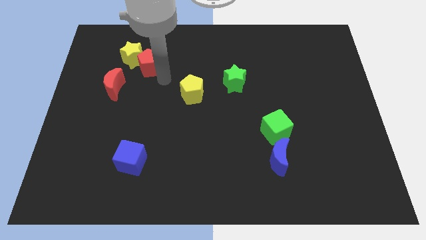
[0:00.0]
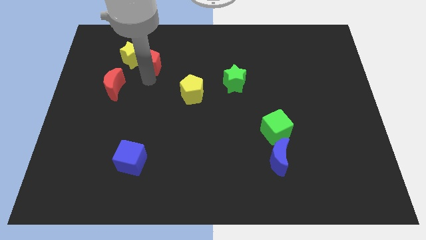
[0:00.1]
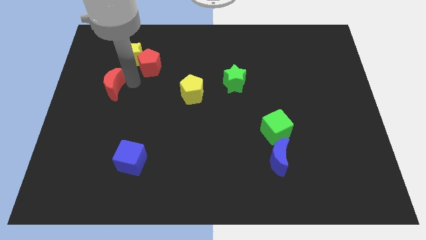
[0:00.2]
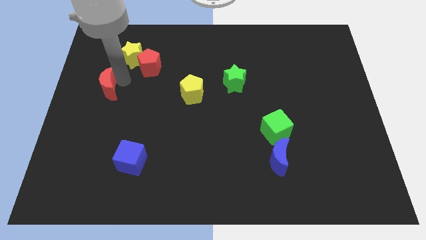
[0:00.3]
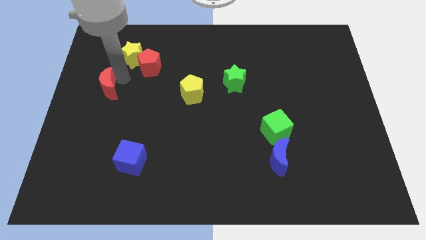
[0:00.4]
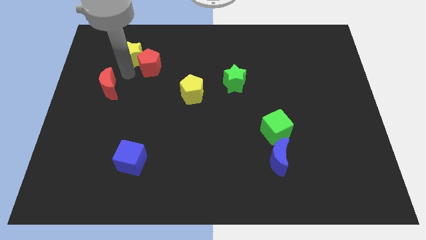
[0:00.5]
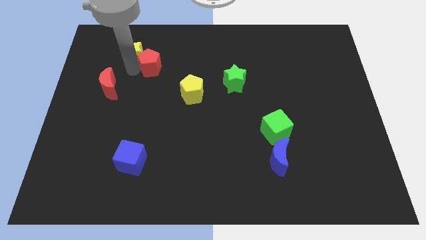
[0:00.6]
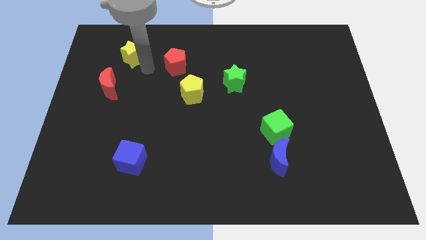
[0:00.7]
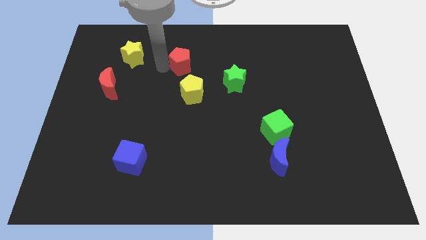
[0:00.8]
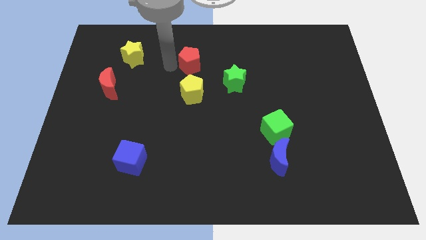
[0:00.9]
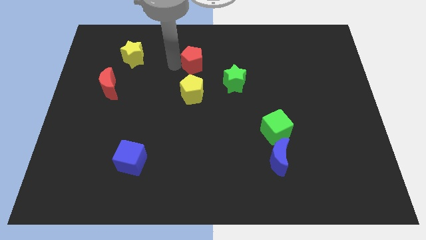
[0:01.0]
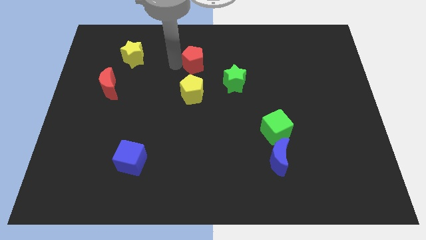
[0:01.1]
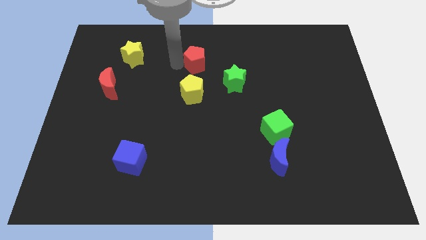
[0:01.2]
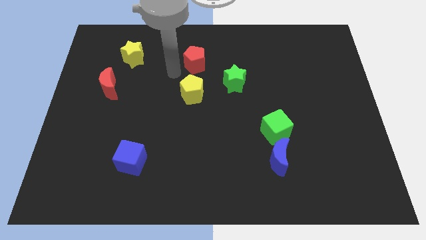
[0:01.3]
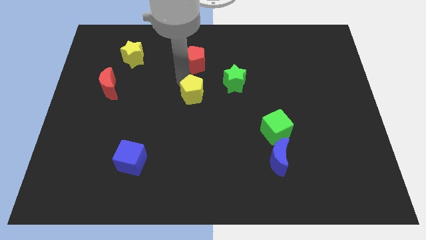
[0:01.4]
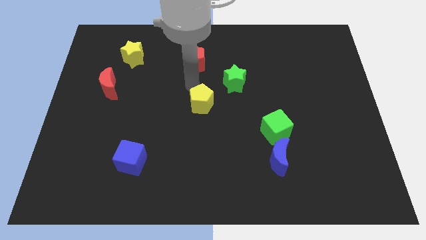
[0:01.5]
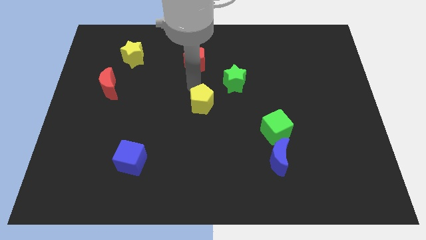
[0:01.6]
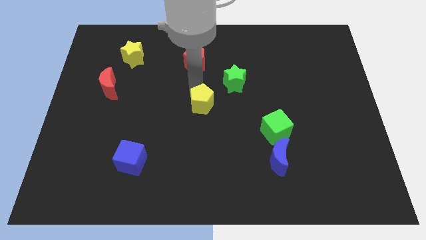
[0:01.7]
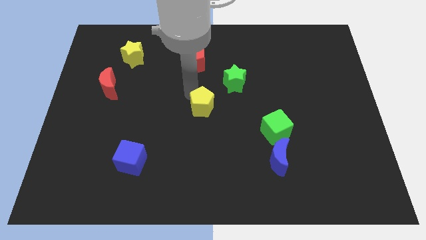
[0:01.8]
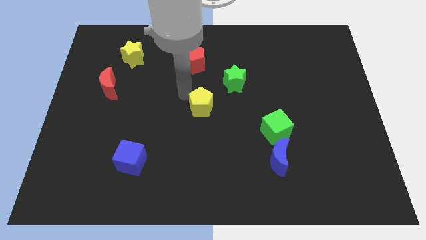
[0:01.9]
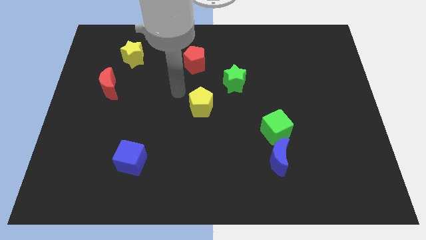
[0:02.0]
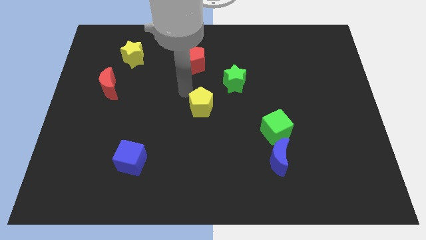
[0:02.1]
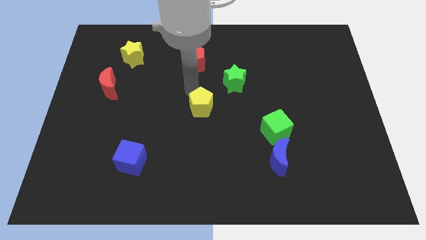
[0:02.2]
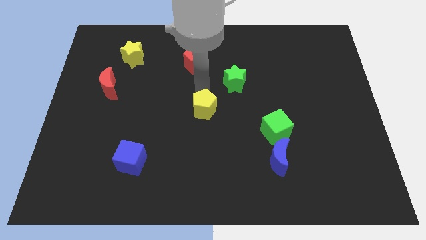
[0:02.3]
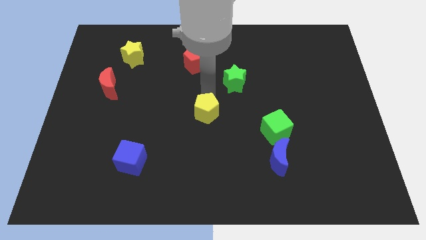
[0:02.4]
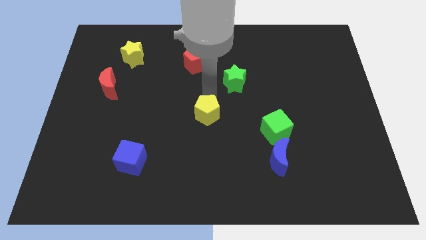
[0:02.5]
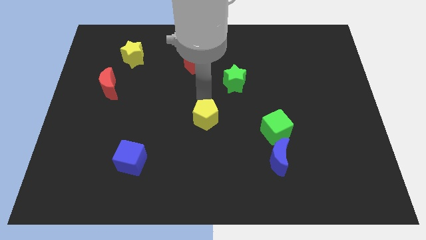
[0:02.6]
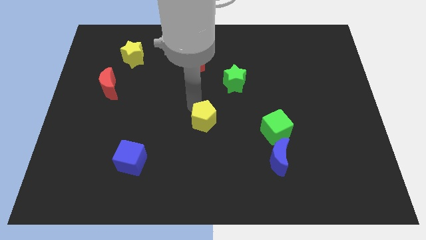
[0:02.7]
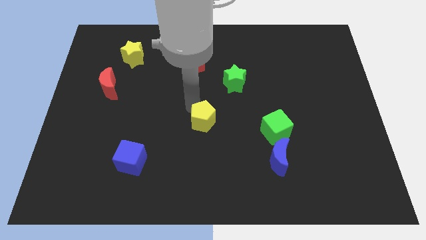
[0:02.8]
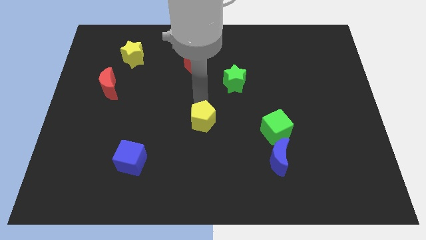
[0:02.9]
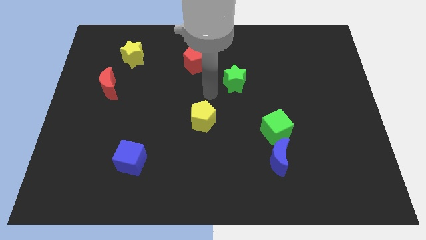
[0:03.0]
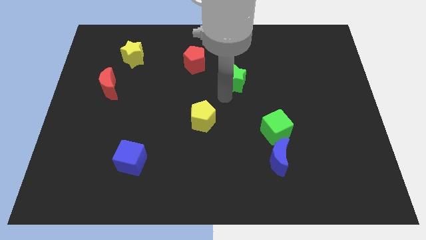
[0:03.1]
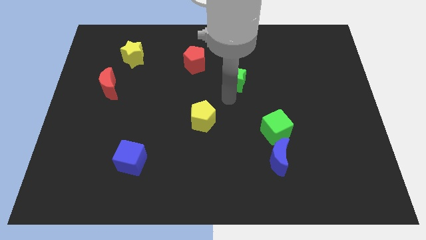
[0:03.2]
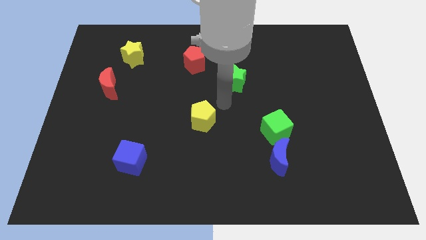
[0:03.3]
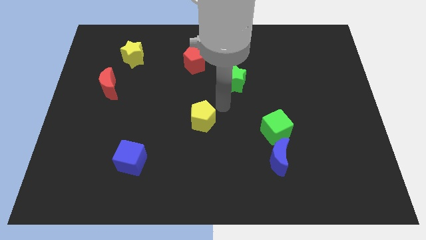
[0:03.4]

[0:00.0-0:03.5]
place the red pentagon above the yellow pentagon

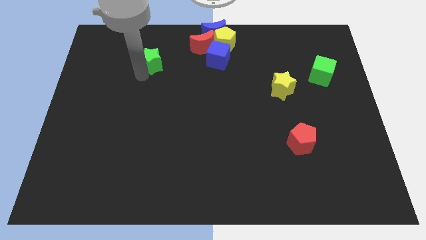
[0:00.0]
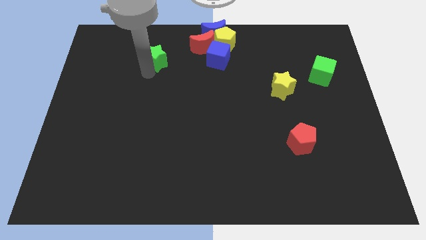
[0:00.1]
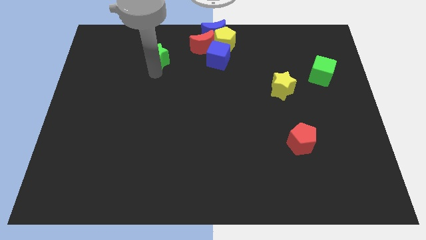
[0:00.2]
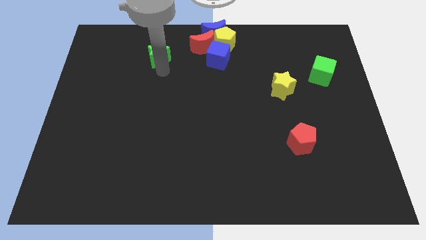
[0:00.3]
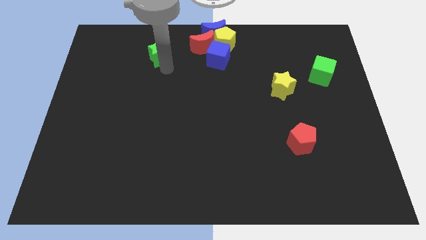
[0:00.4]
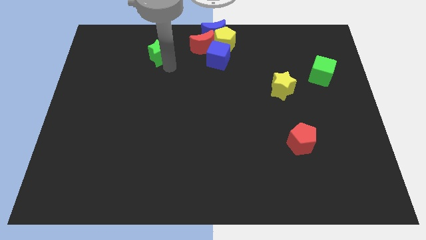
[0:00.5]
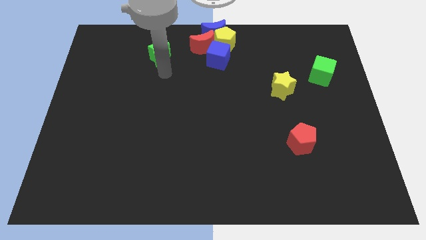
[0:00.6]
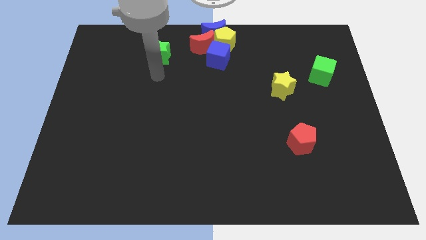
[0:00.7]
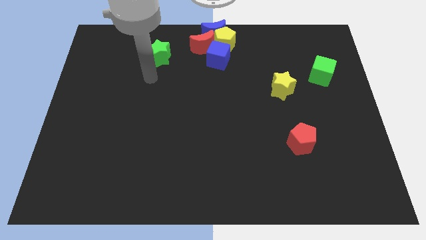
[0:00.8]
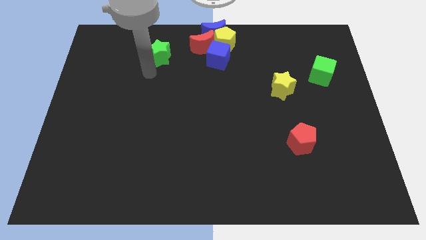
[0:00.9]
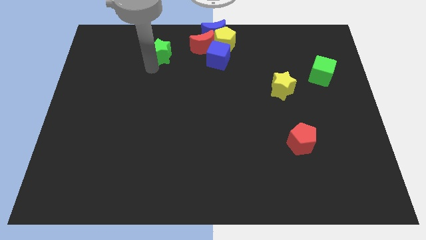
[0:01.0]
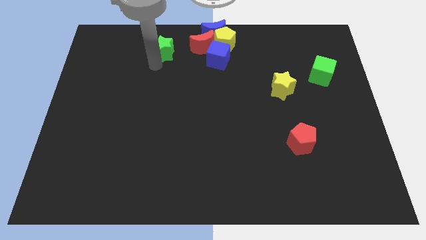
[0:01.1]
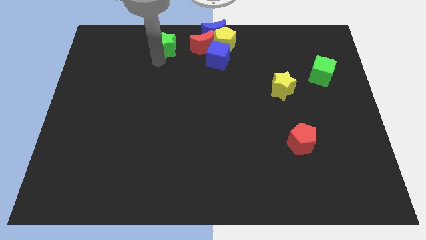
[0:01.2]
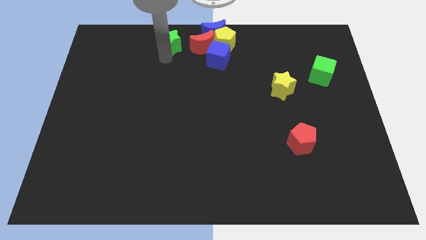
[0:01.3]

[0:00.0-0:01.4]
slide the green star parallel left to the red moon

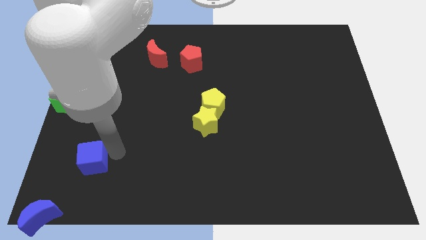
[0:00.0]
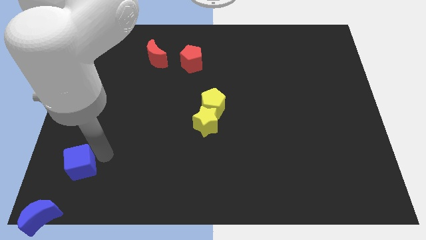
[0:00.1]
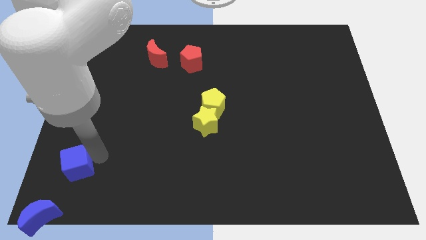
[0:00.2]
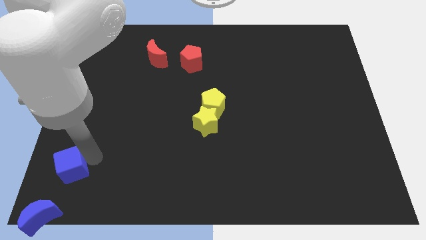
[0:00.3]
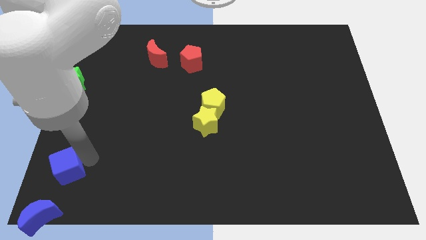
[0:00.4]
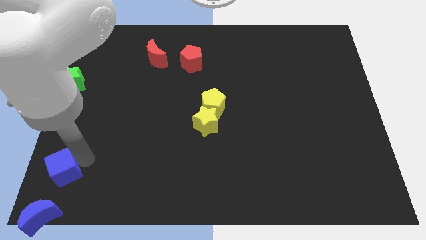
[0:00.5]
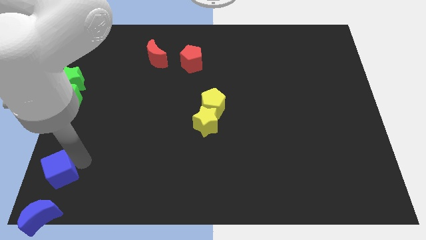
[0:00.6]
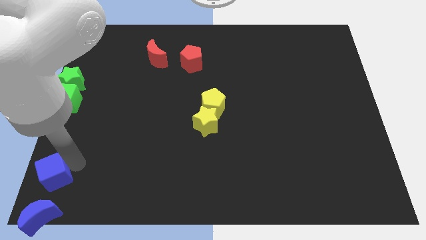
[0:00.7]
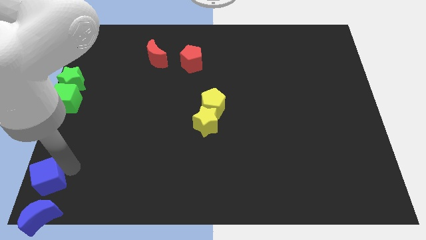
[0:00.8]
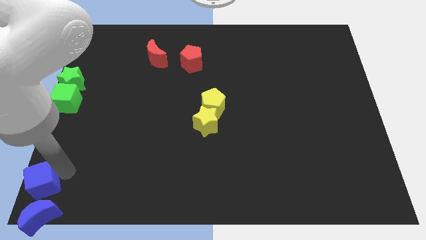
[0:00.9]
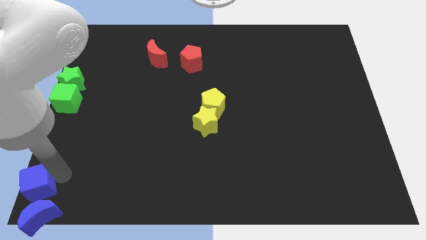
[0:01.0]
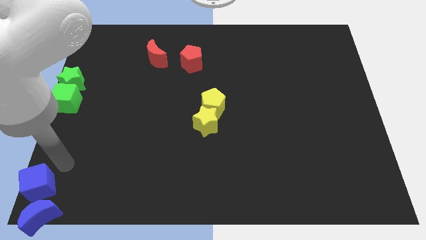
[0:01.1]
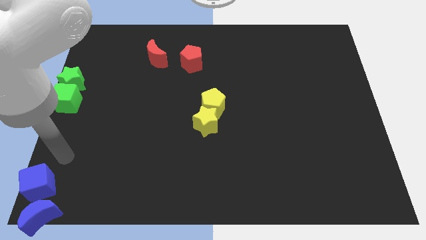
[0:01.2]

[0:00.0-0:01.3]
place blue cube above the blue moon

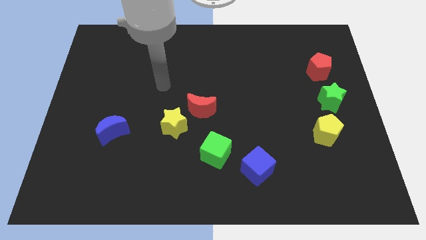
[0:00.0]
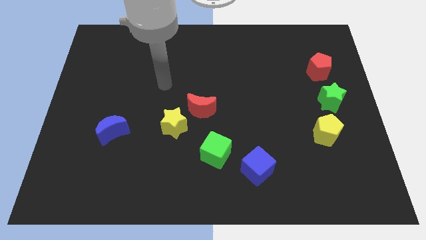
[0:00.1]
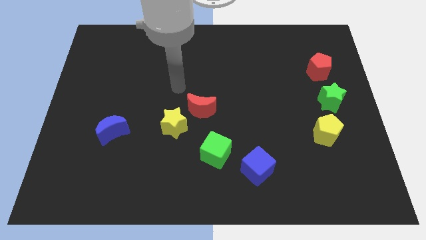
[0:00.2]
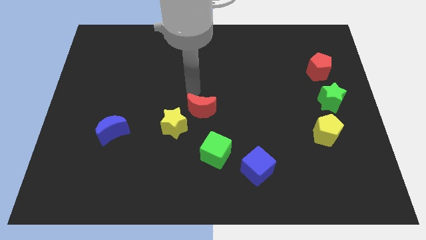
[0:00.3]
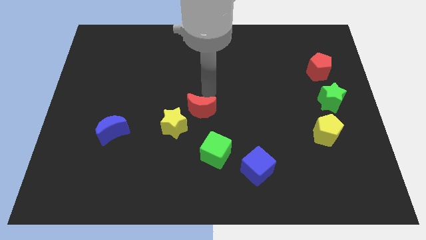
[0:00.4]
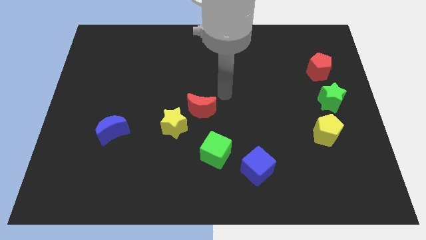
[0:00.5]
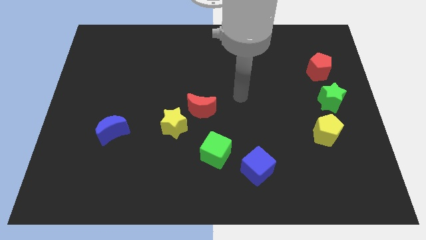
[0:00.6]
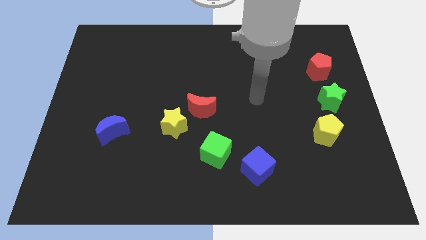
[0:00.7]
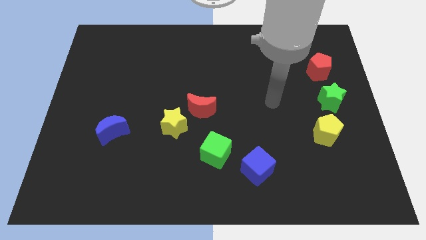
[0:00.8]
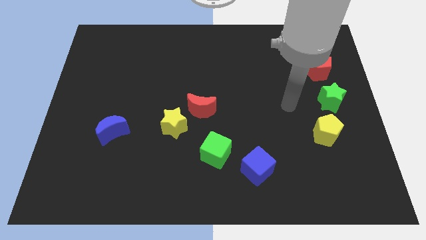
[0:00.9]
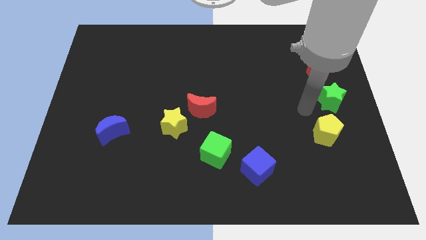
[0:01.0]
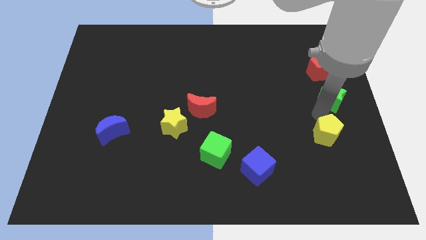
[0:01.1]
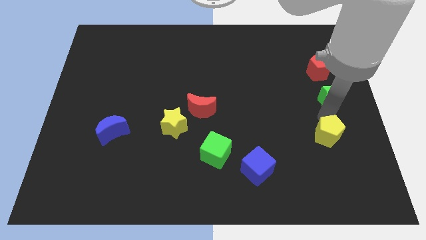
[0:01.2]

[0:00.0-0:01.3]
point the arm in between the yellow pentagon and the green star

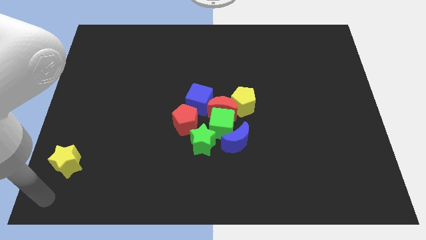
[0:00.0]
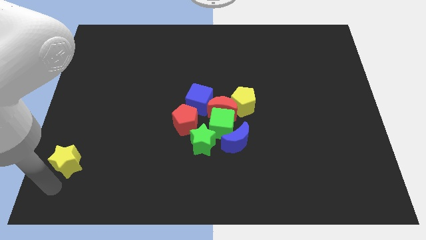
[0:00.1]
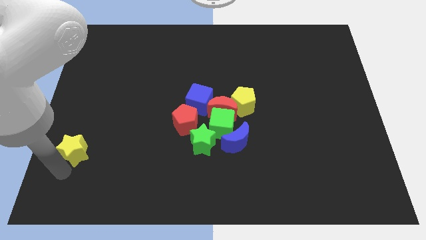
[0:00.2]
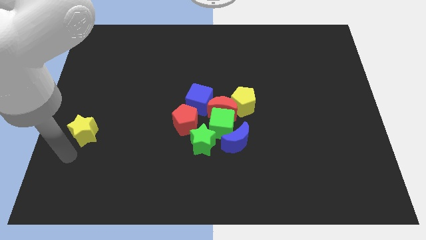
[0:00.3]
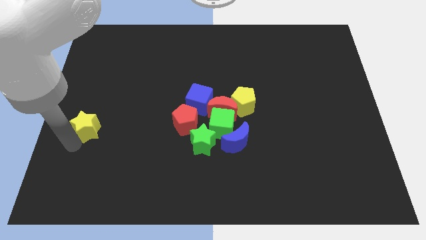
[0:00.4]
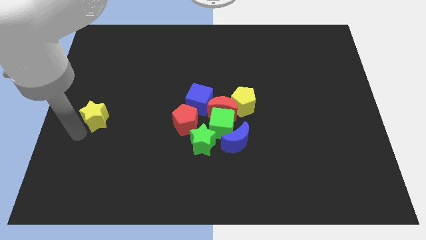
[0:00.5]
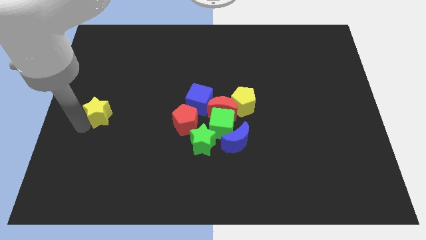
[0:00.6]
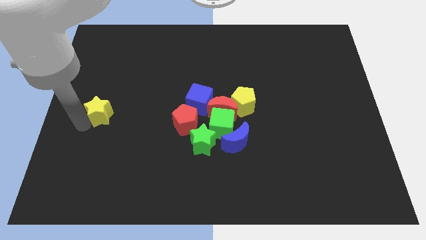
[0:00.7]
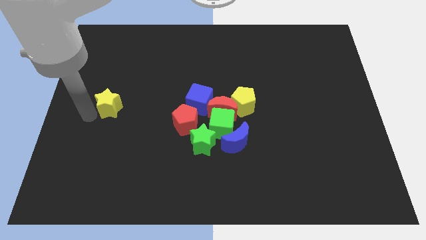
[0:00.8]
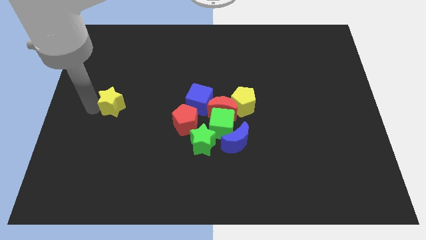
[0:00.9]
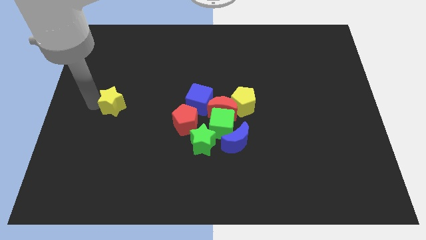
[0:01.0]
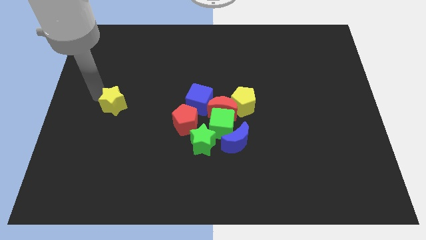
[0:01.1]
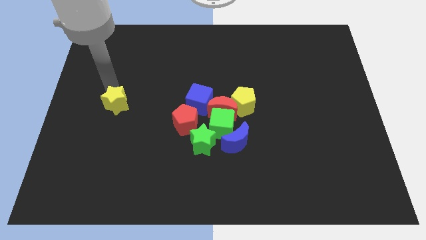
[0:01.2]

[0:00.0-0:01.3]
push yellow star slightly towards upwards
